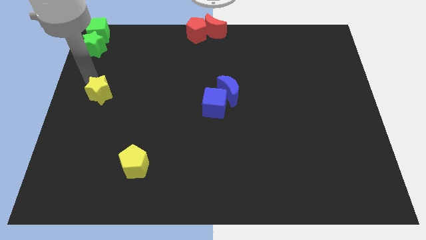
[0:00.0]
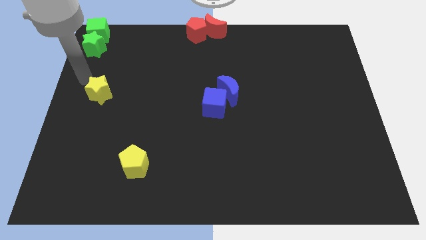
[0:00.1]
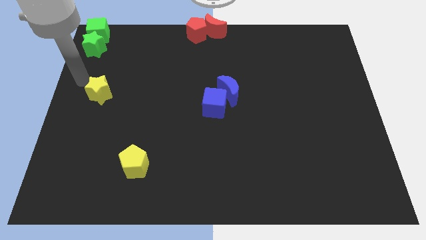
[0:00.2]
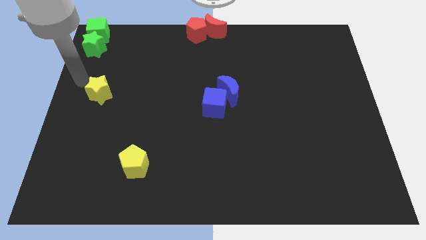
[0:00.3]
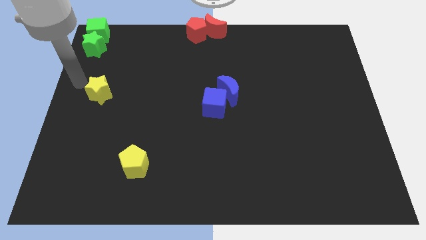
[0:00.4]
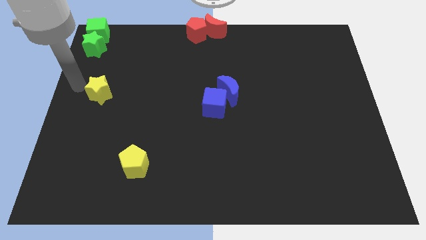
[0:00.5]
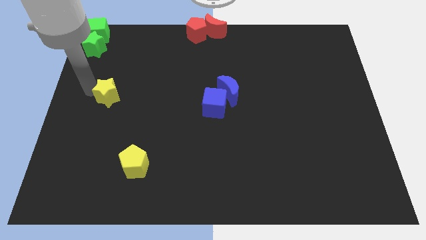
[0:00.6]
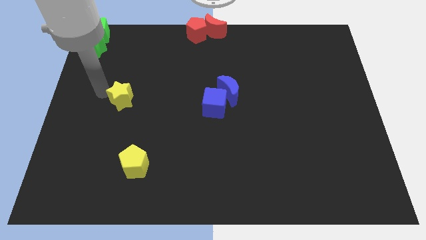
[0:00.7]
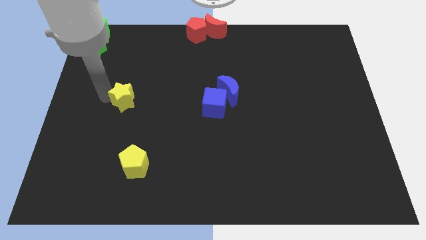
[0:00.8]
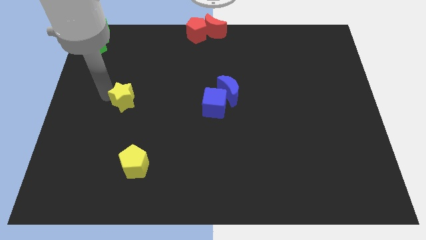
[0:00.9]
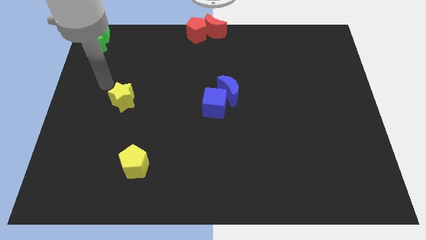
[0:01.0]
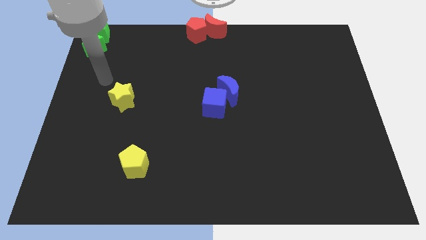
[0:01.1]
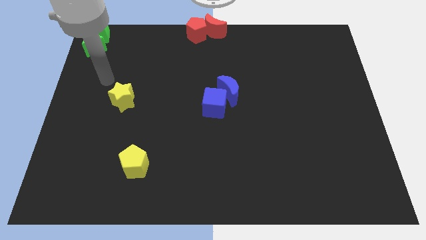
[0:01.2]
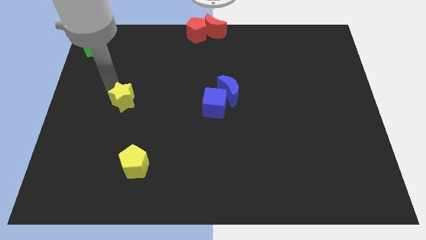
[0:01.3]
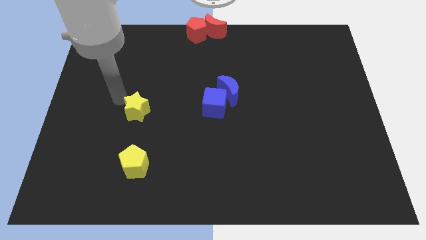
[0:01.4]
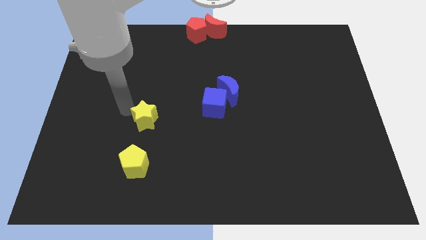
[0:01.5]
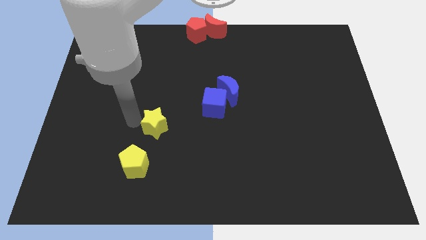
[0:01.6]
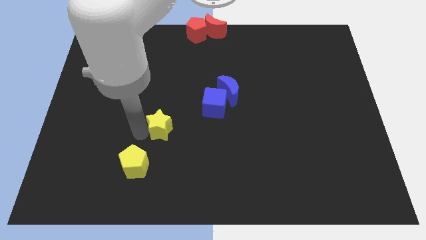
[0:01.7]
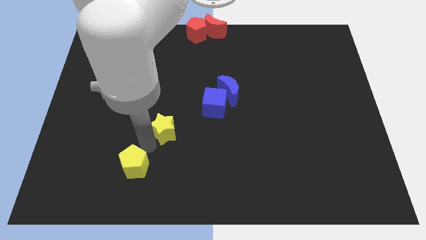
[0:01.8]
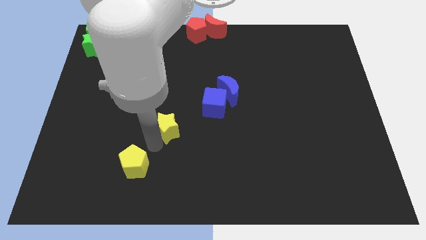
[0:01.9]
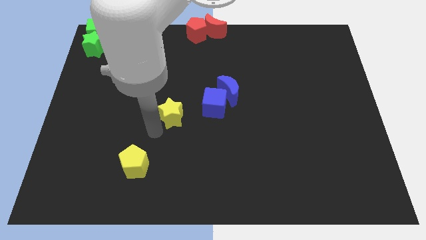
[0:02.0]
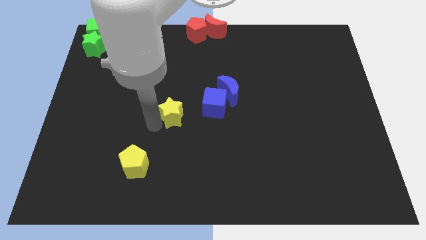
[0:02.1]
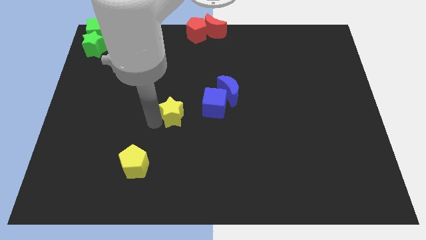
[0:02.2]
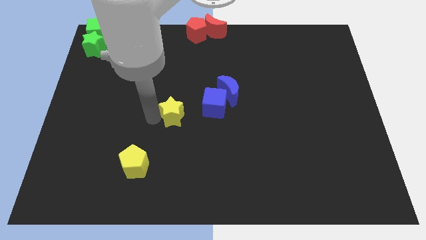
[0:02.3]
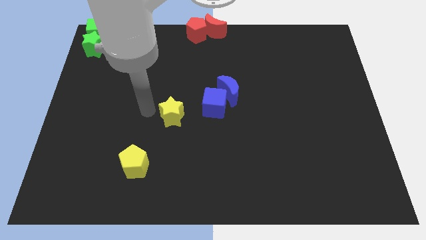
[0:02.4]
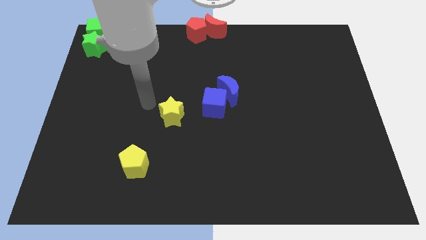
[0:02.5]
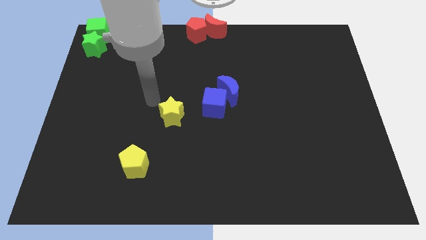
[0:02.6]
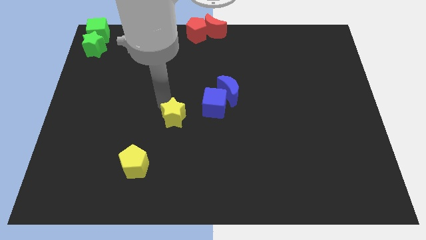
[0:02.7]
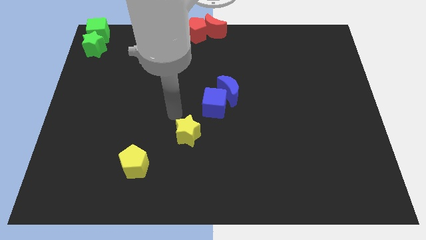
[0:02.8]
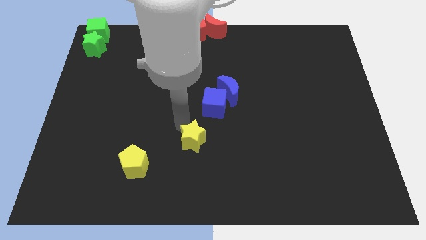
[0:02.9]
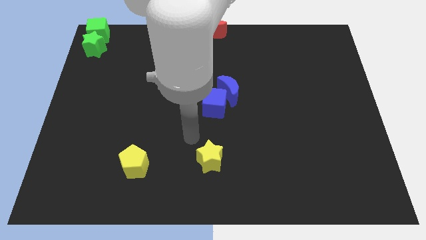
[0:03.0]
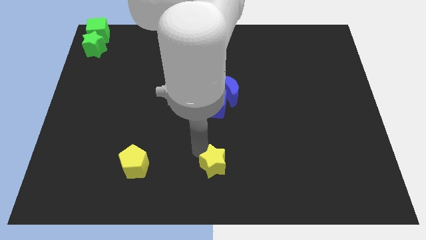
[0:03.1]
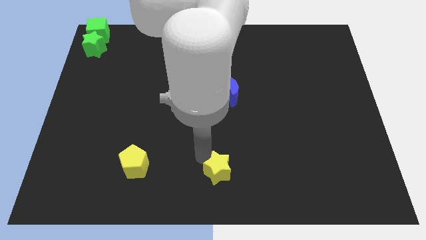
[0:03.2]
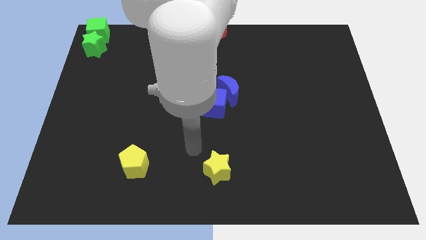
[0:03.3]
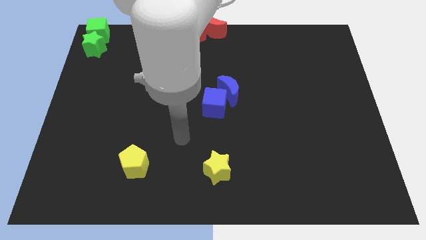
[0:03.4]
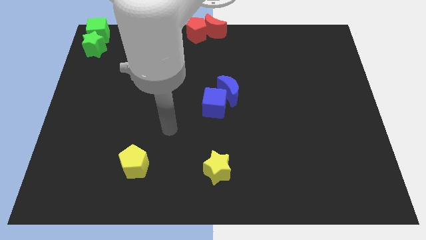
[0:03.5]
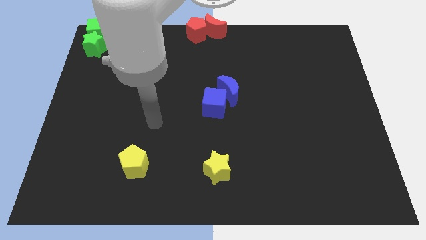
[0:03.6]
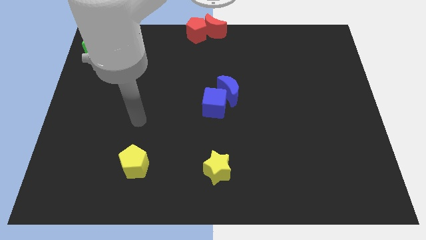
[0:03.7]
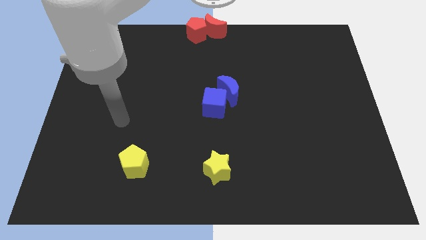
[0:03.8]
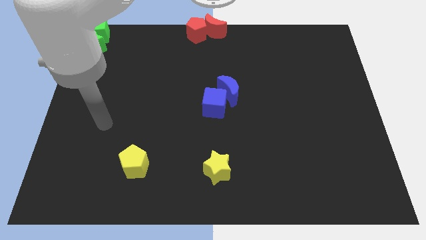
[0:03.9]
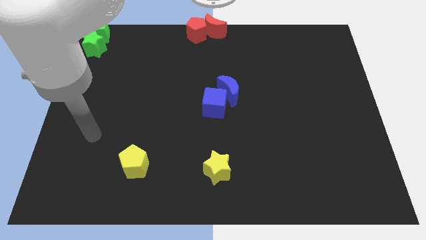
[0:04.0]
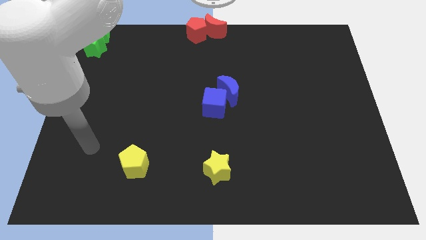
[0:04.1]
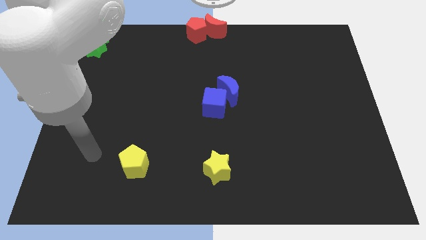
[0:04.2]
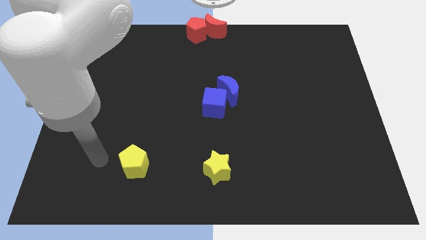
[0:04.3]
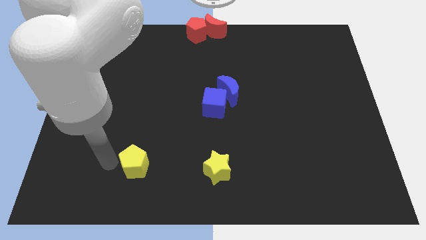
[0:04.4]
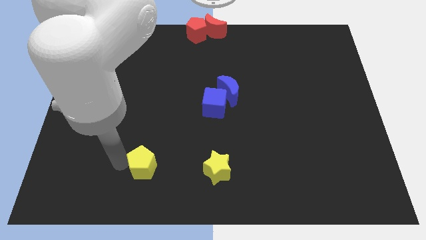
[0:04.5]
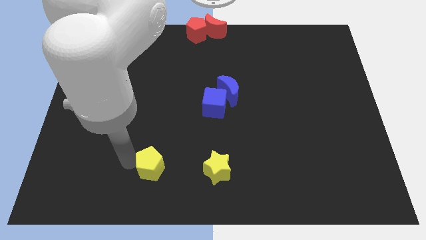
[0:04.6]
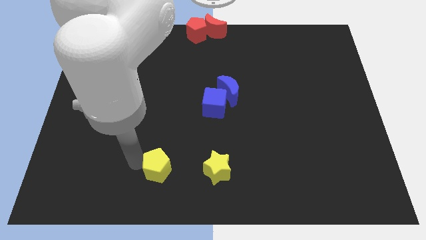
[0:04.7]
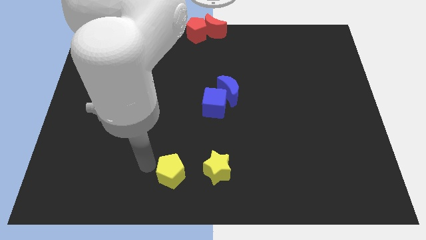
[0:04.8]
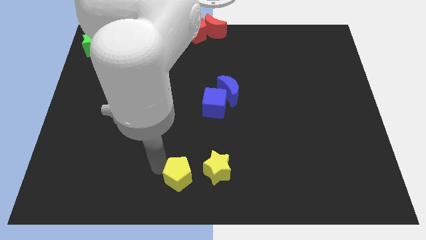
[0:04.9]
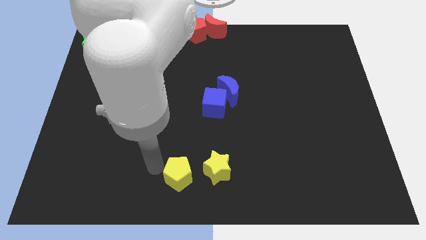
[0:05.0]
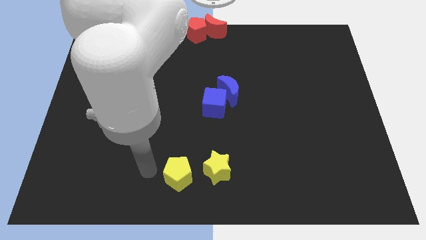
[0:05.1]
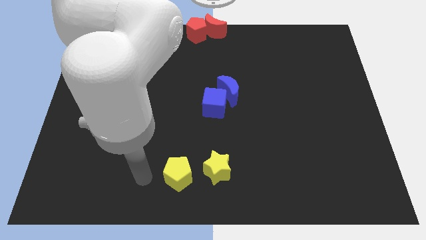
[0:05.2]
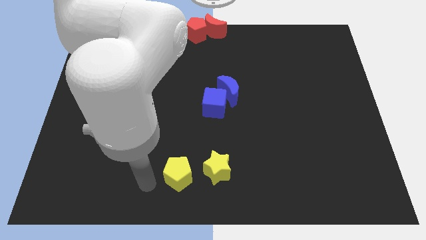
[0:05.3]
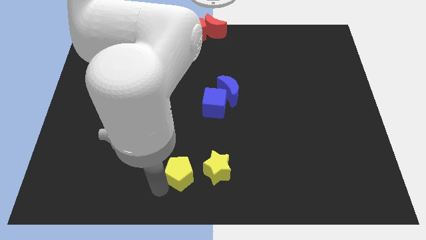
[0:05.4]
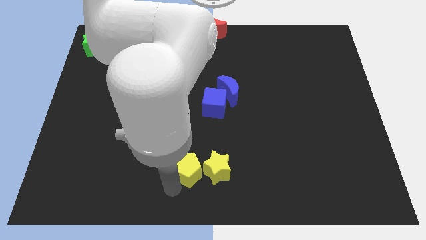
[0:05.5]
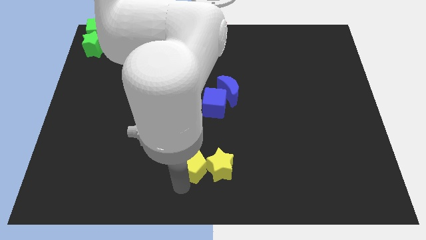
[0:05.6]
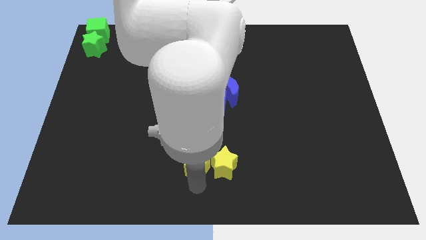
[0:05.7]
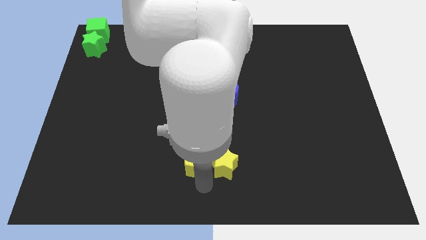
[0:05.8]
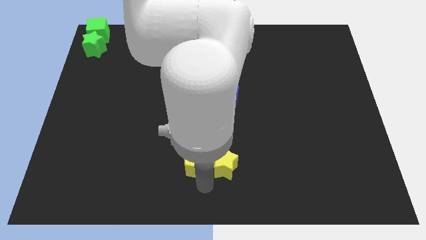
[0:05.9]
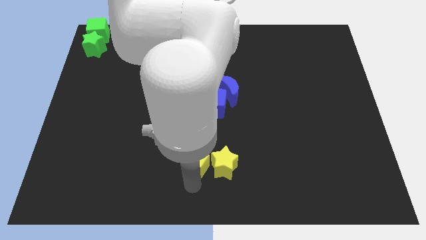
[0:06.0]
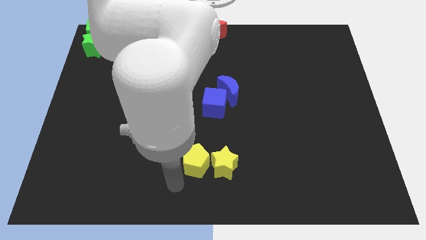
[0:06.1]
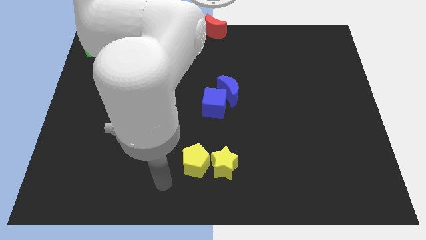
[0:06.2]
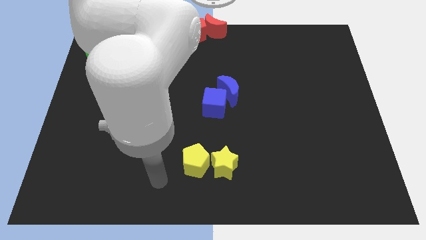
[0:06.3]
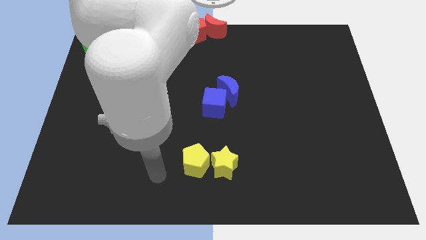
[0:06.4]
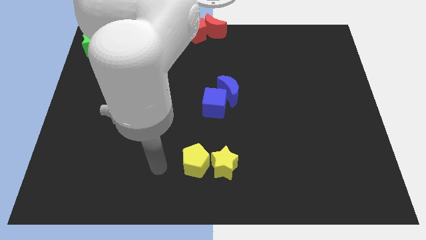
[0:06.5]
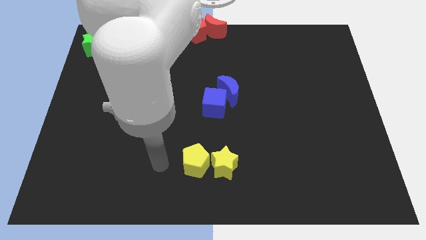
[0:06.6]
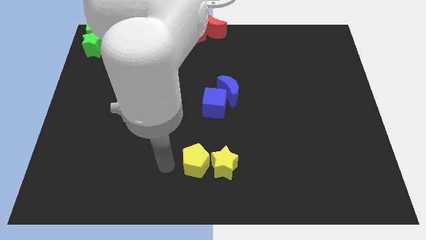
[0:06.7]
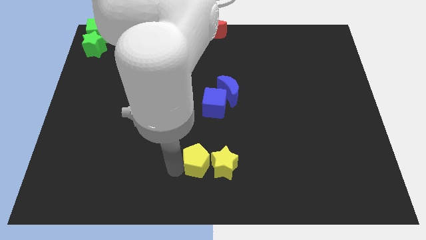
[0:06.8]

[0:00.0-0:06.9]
group the yellow blocks below the group of blue blocks

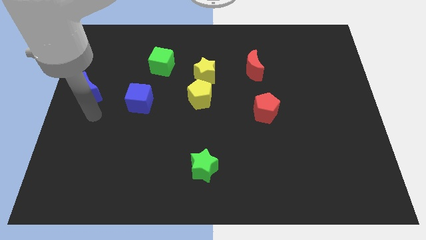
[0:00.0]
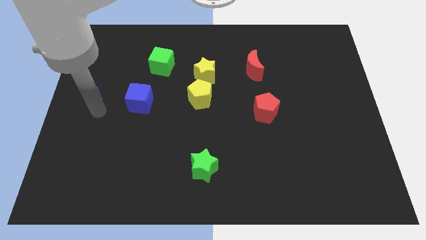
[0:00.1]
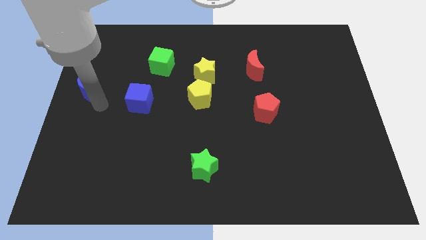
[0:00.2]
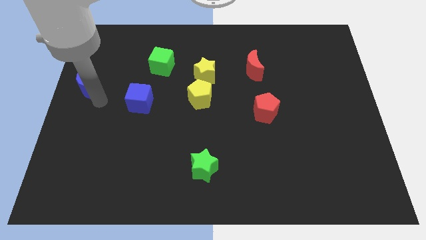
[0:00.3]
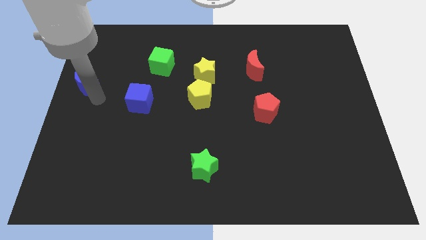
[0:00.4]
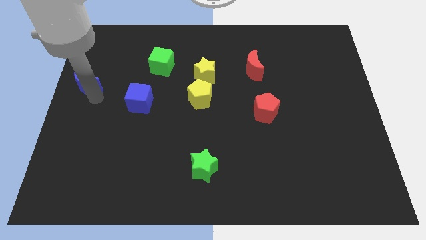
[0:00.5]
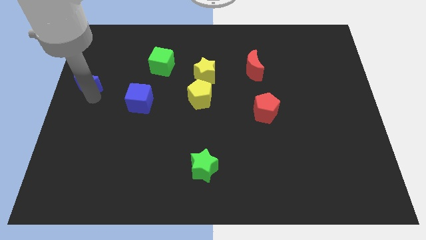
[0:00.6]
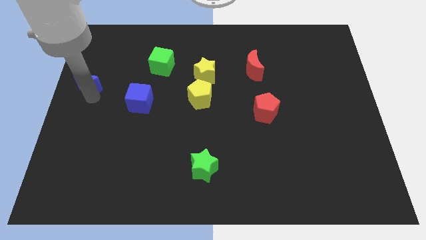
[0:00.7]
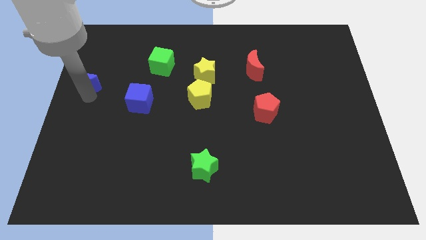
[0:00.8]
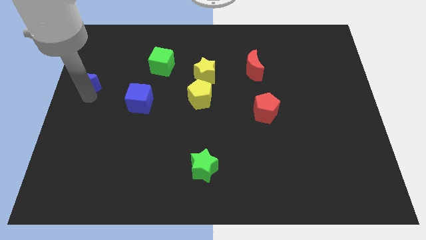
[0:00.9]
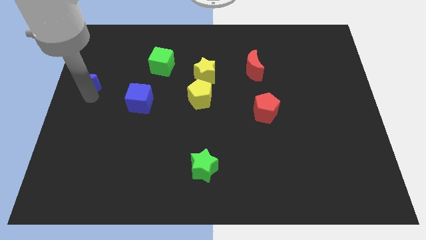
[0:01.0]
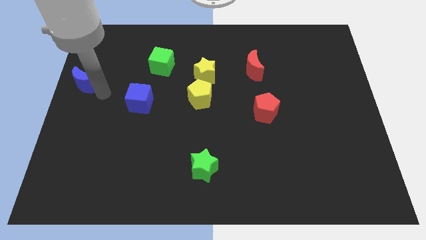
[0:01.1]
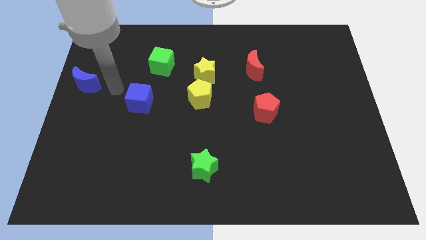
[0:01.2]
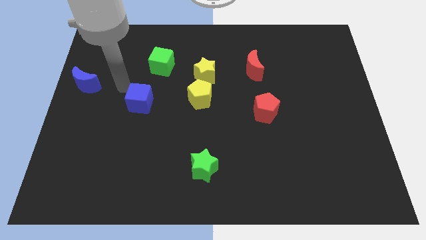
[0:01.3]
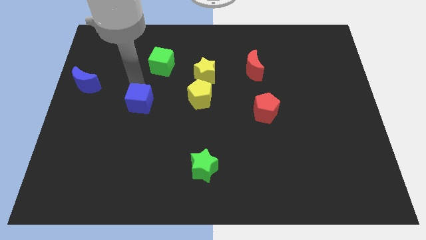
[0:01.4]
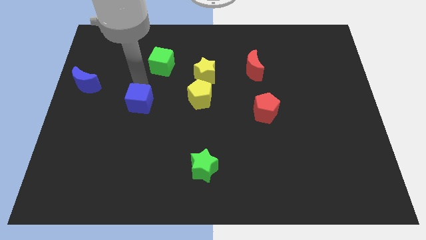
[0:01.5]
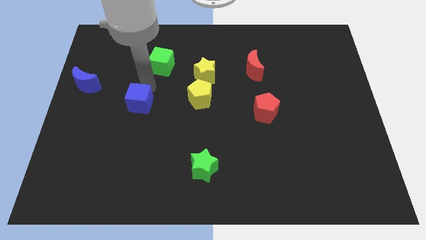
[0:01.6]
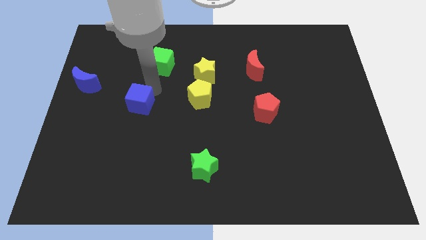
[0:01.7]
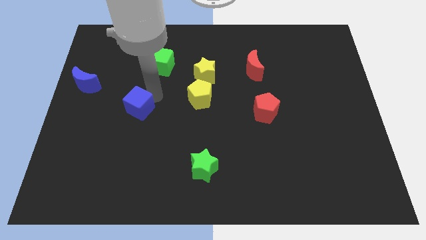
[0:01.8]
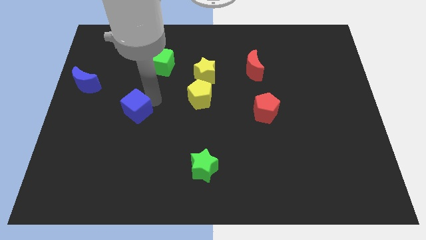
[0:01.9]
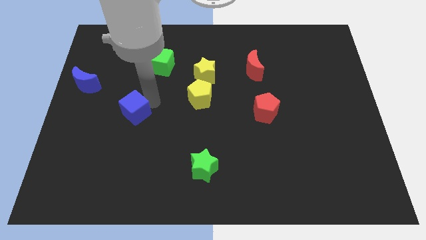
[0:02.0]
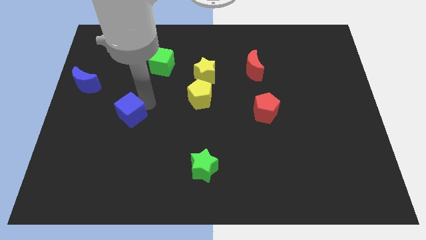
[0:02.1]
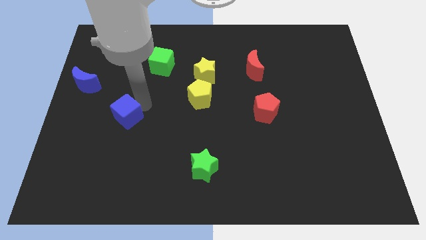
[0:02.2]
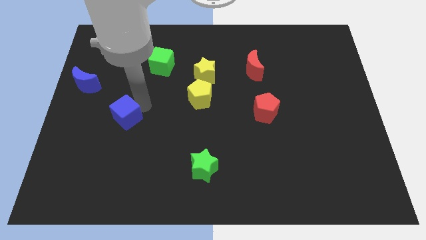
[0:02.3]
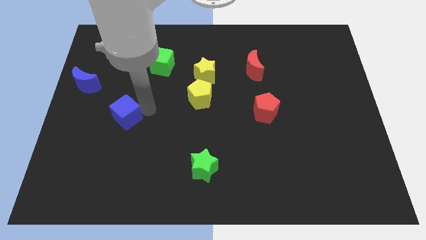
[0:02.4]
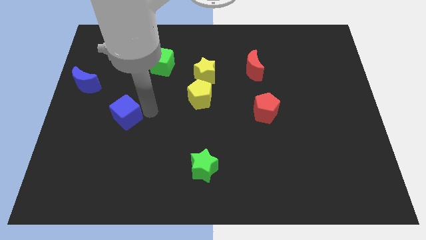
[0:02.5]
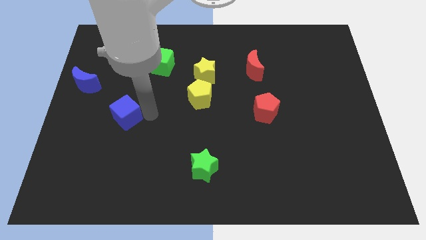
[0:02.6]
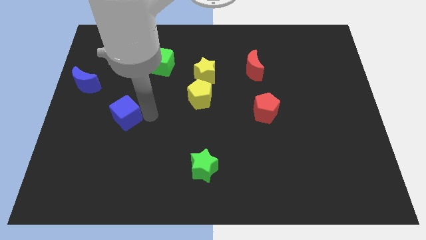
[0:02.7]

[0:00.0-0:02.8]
place the blue cube diagonal to the blue moon
